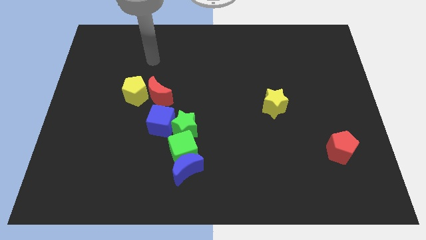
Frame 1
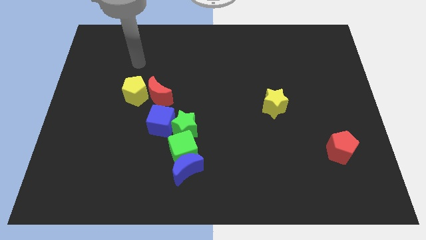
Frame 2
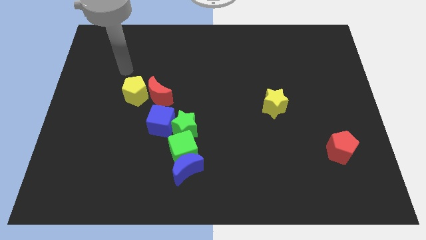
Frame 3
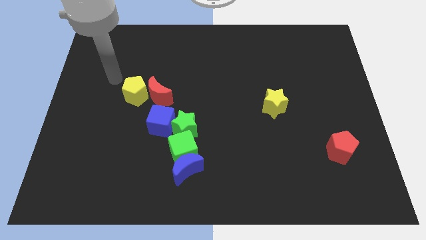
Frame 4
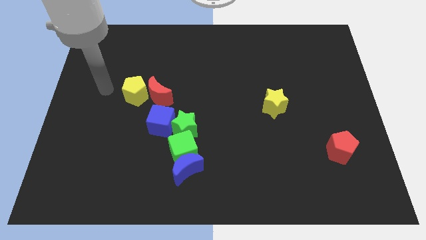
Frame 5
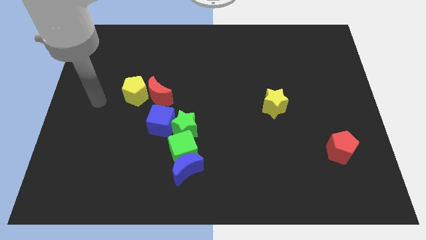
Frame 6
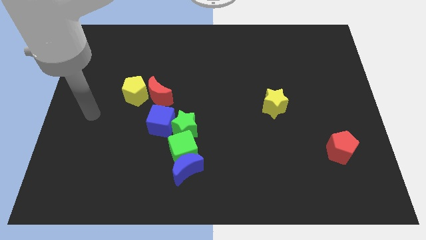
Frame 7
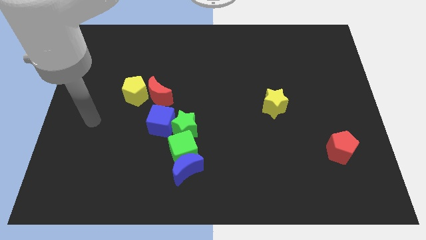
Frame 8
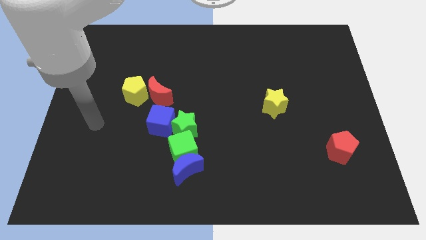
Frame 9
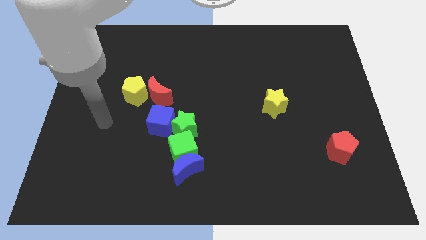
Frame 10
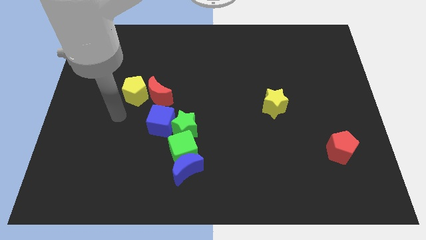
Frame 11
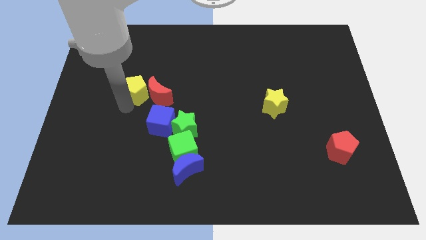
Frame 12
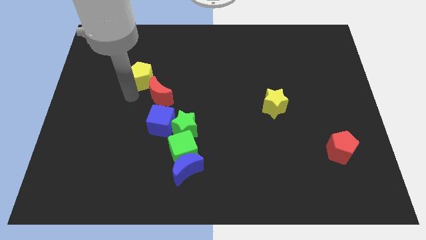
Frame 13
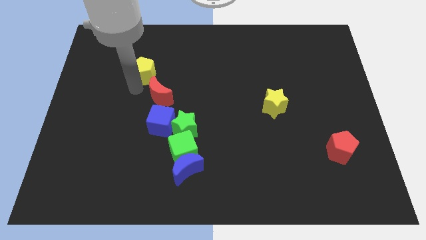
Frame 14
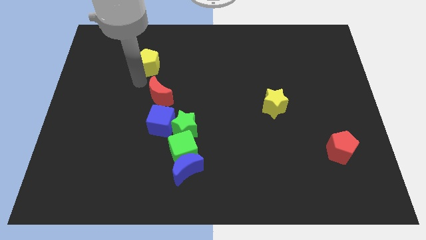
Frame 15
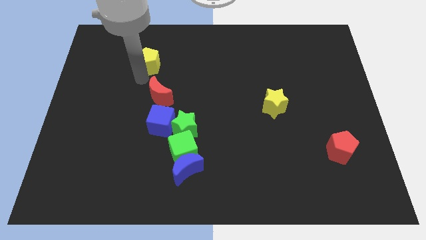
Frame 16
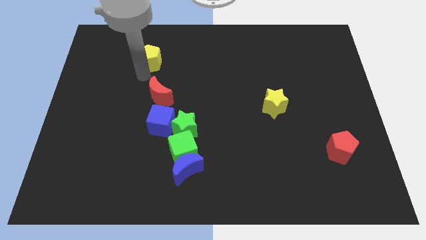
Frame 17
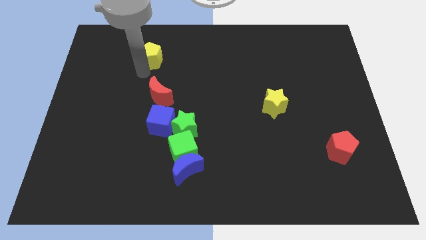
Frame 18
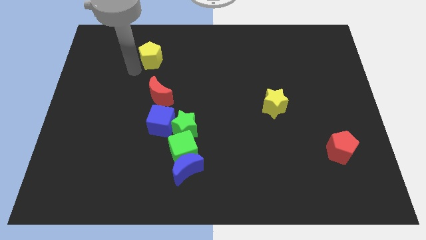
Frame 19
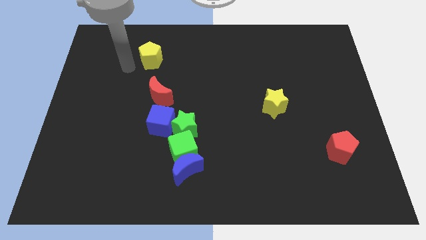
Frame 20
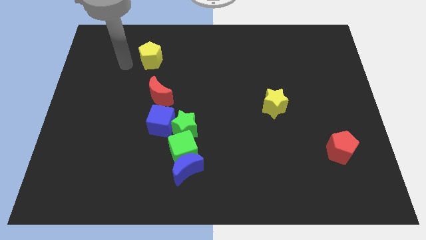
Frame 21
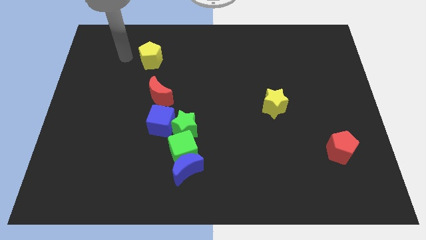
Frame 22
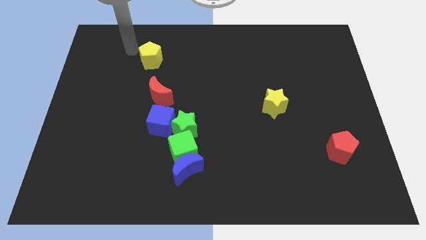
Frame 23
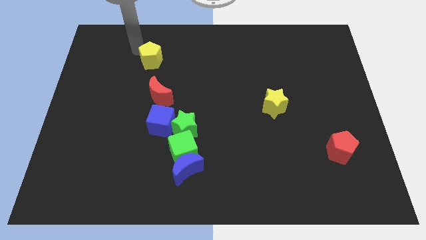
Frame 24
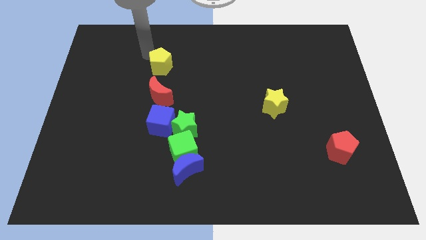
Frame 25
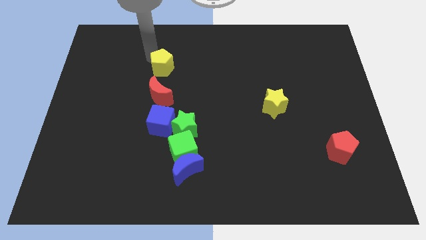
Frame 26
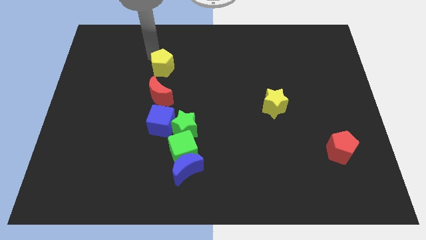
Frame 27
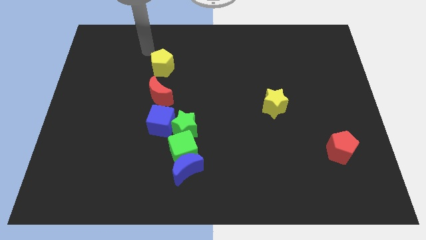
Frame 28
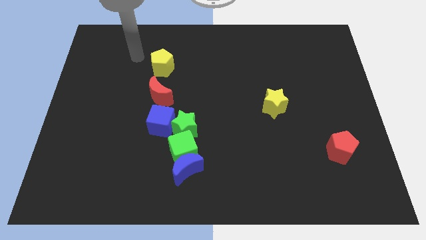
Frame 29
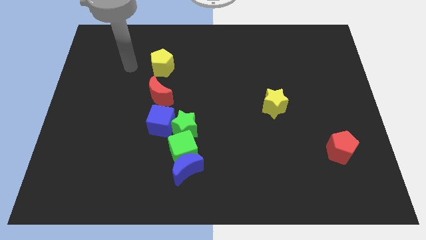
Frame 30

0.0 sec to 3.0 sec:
place the yellow pentagon above the red crescent

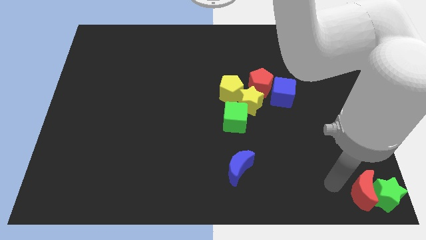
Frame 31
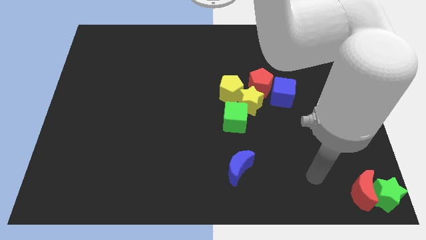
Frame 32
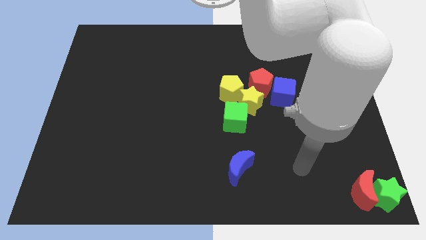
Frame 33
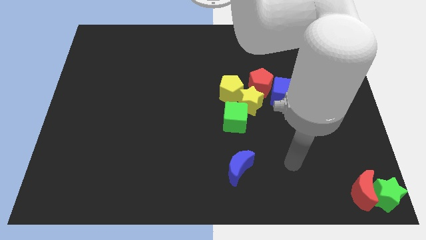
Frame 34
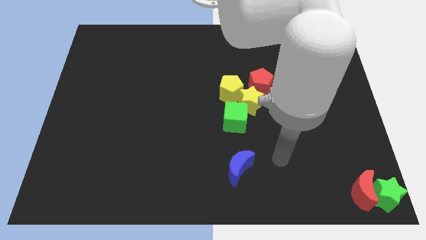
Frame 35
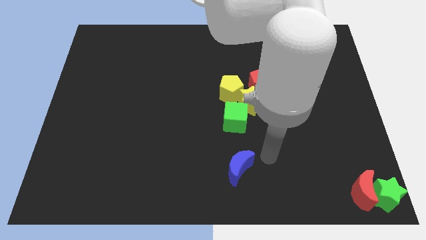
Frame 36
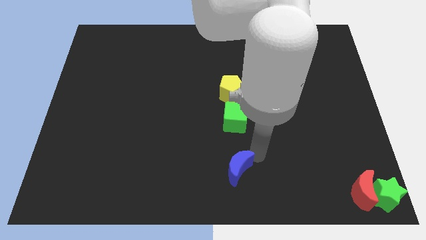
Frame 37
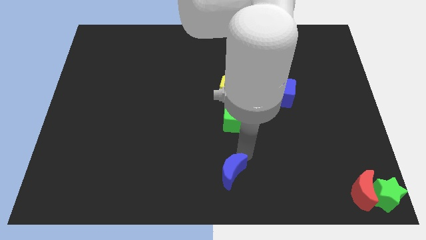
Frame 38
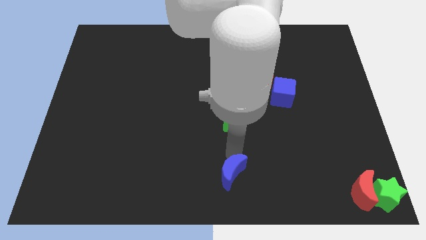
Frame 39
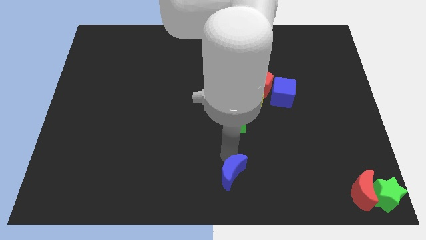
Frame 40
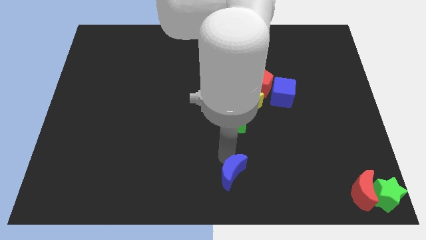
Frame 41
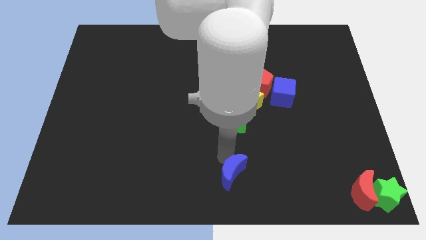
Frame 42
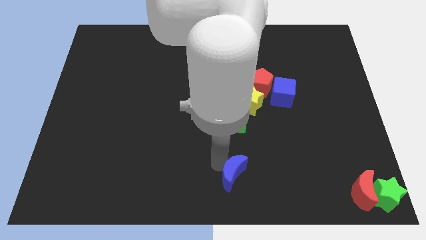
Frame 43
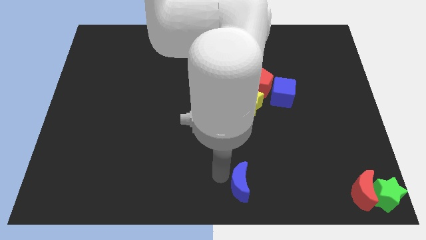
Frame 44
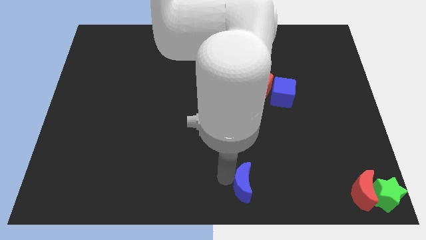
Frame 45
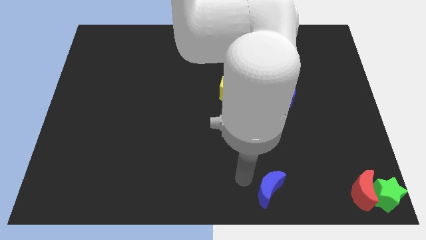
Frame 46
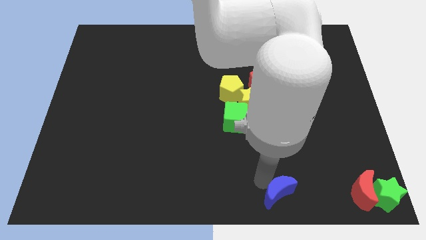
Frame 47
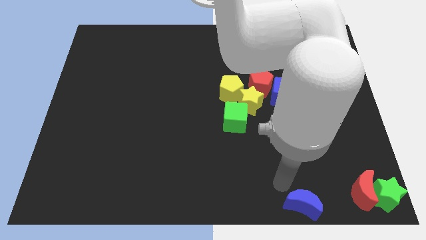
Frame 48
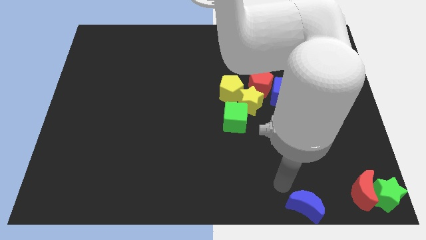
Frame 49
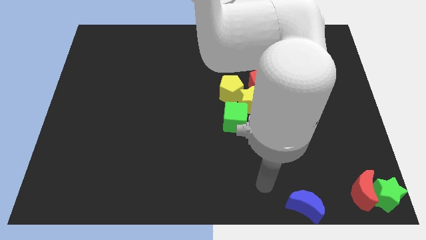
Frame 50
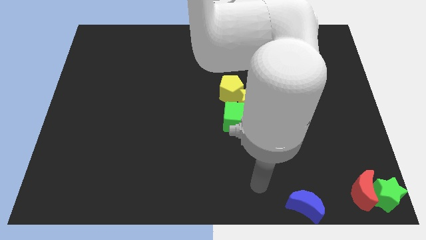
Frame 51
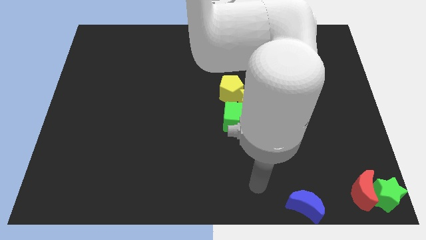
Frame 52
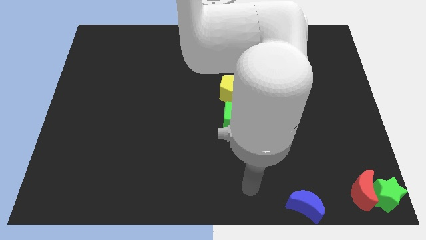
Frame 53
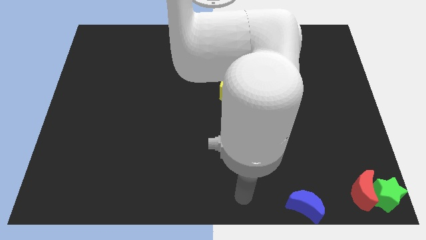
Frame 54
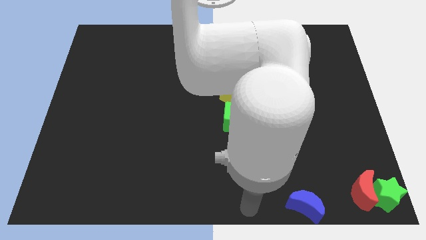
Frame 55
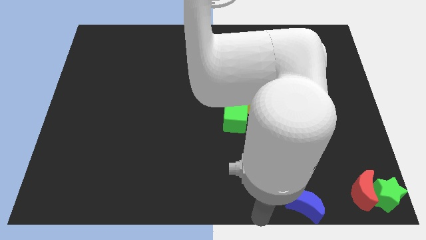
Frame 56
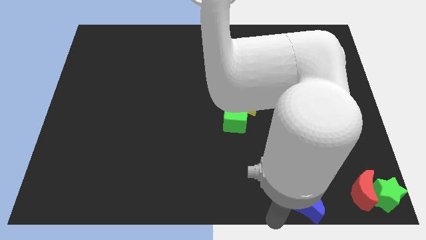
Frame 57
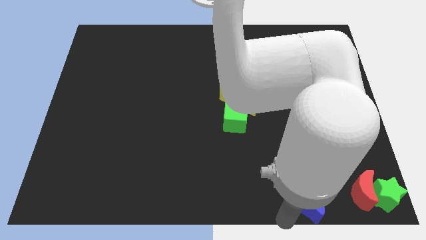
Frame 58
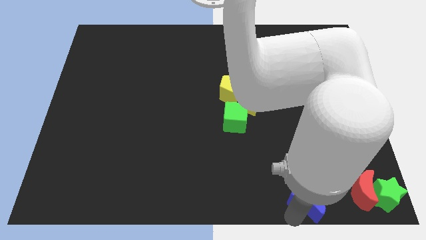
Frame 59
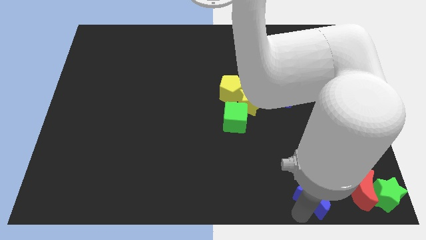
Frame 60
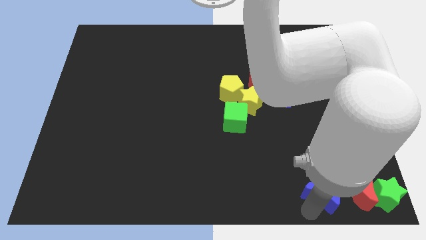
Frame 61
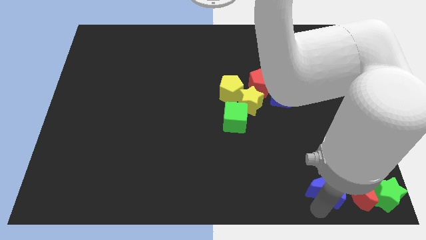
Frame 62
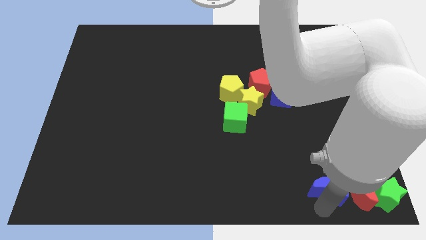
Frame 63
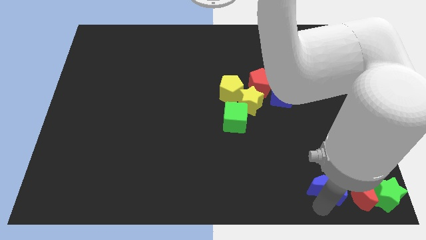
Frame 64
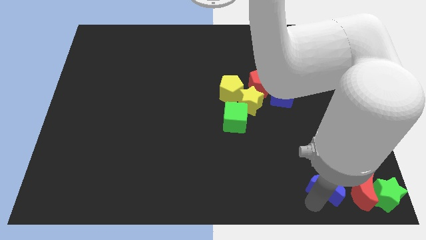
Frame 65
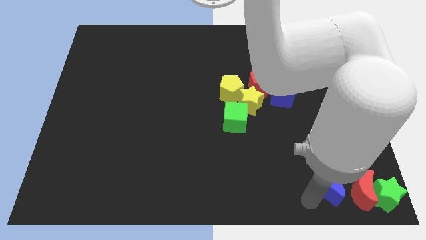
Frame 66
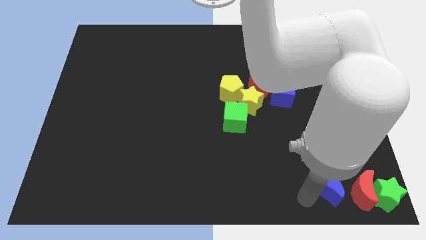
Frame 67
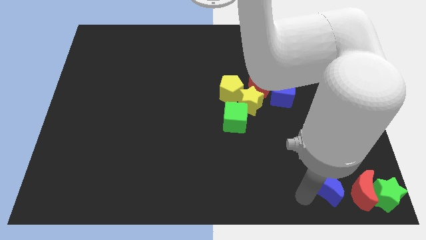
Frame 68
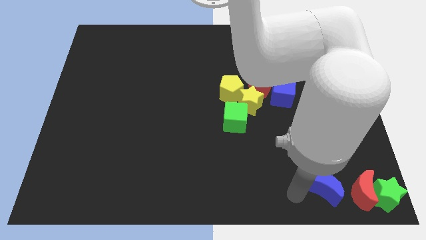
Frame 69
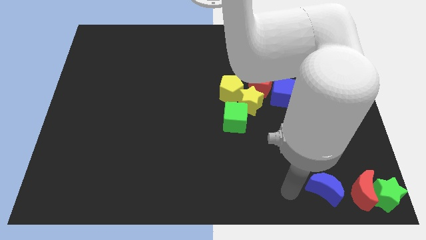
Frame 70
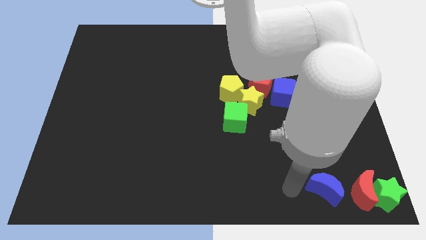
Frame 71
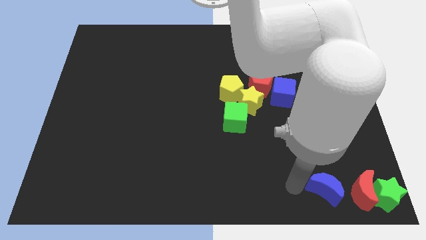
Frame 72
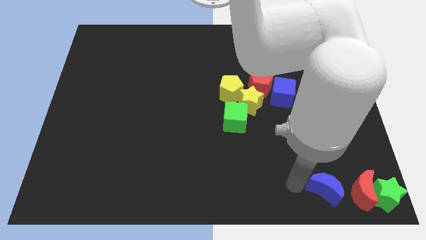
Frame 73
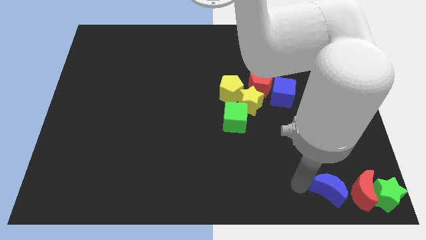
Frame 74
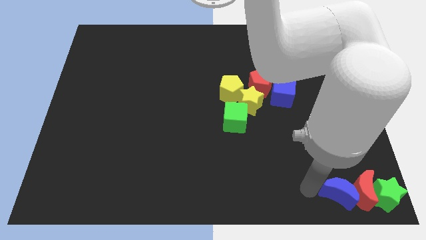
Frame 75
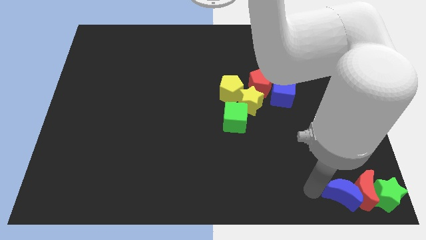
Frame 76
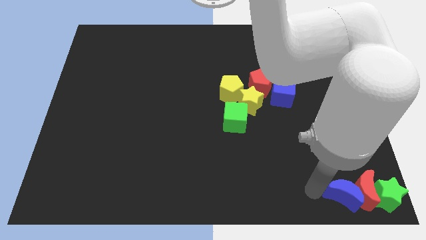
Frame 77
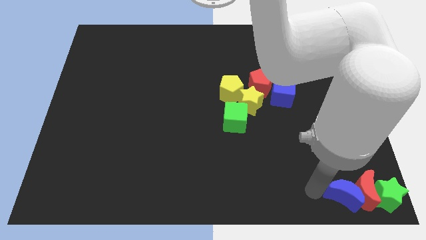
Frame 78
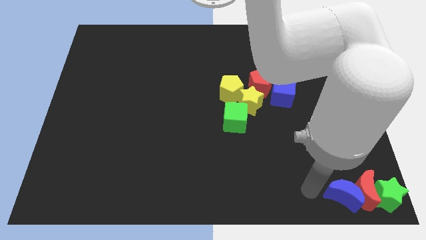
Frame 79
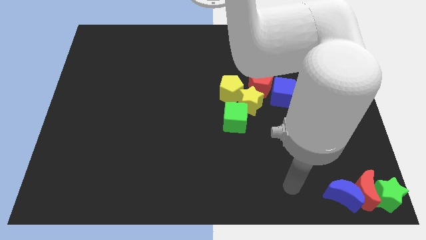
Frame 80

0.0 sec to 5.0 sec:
put the blue crescent on the left side of the red crescent

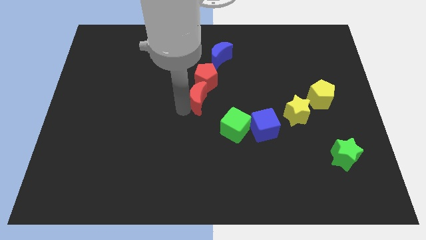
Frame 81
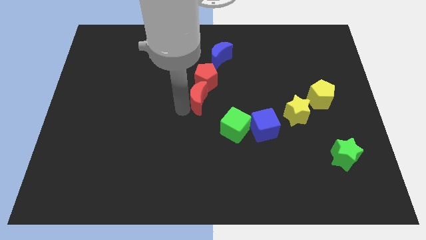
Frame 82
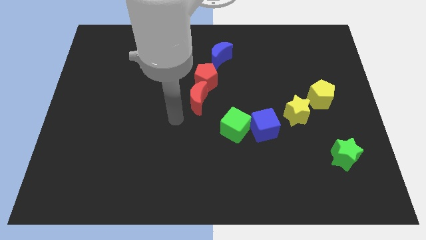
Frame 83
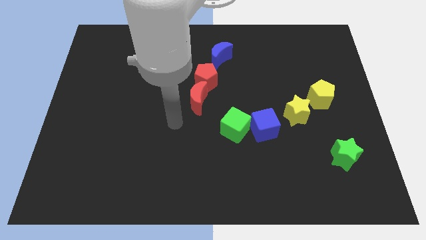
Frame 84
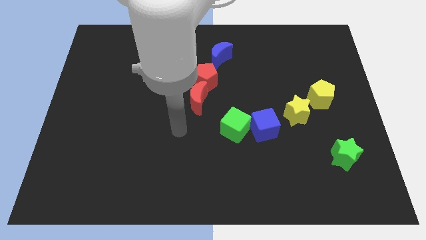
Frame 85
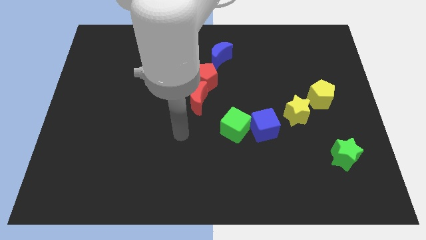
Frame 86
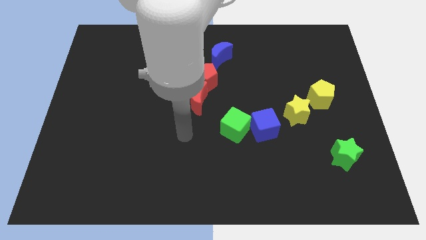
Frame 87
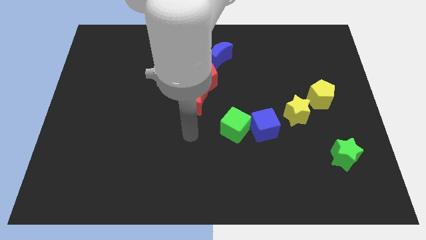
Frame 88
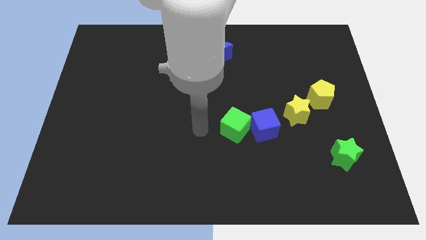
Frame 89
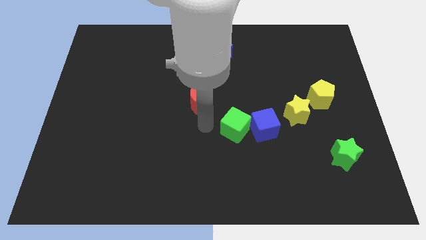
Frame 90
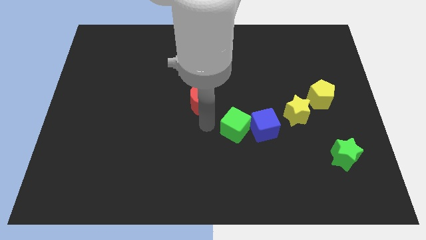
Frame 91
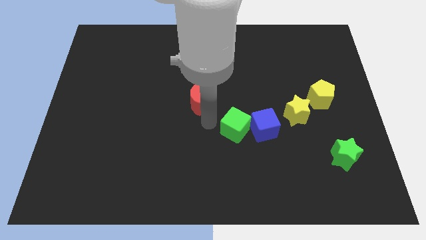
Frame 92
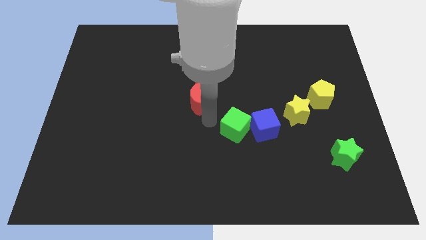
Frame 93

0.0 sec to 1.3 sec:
place your hand in between the red moon and green cube
